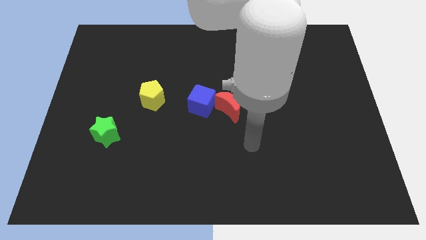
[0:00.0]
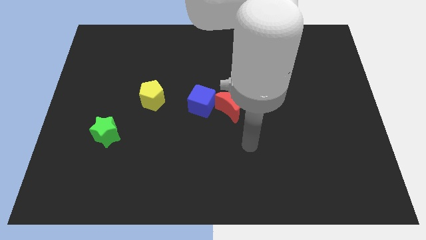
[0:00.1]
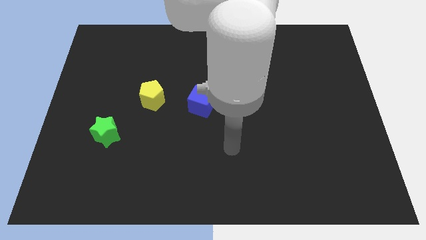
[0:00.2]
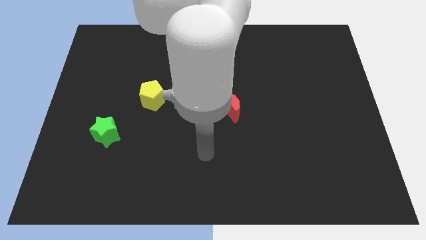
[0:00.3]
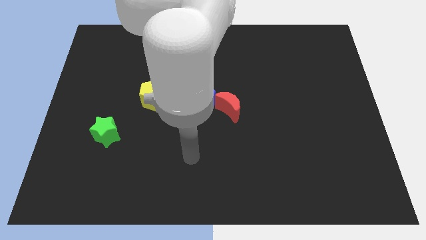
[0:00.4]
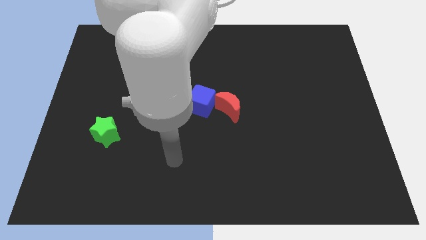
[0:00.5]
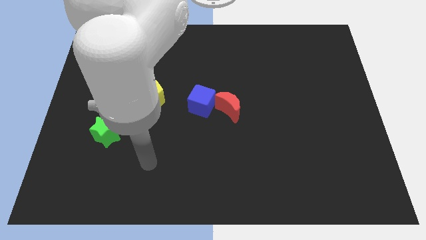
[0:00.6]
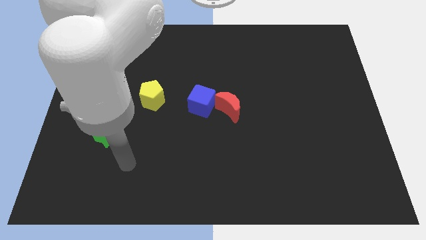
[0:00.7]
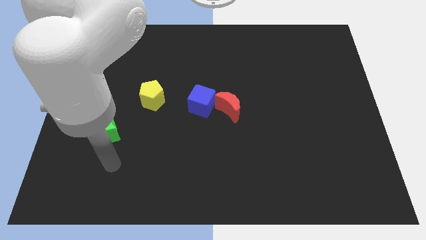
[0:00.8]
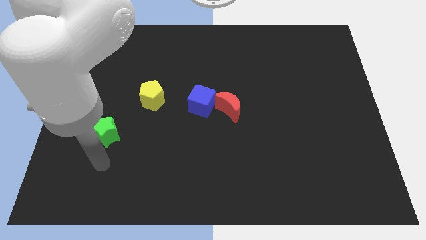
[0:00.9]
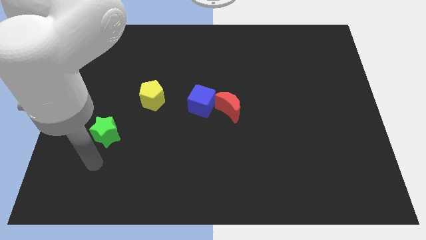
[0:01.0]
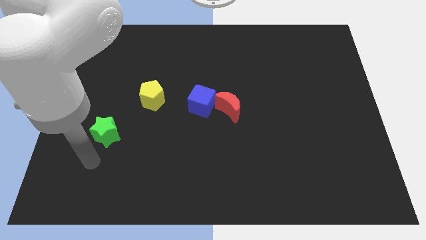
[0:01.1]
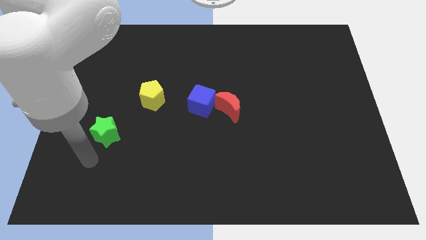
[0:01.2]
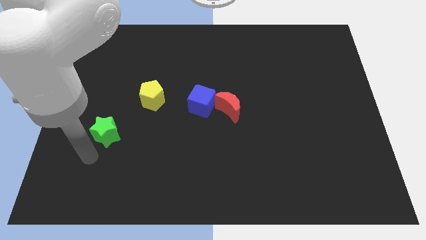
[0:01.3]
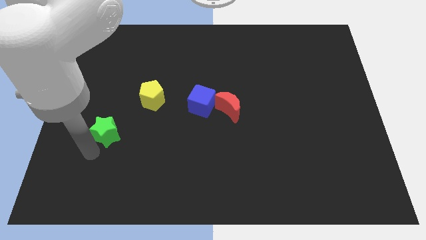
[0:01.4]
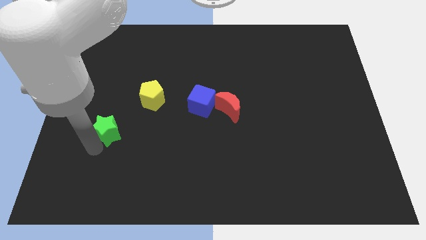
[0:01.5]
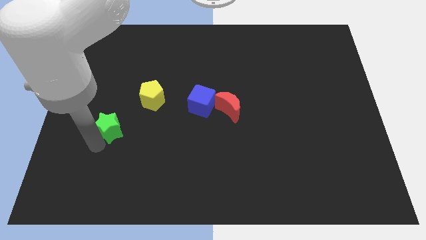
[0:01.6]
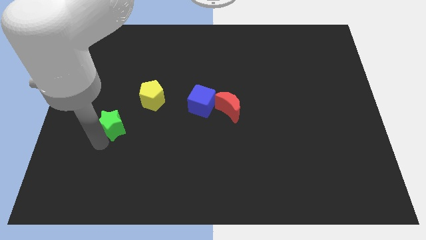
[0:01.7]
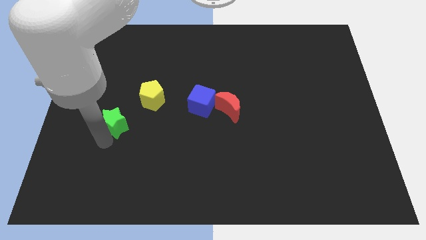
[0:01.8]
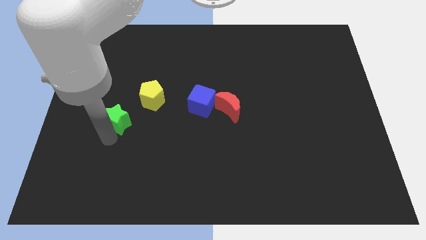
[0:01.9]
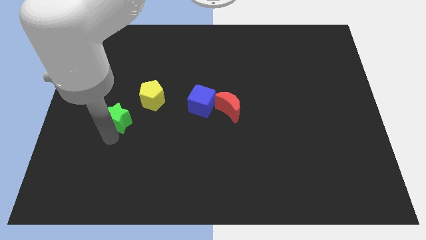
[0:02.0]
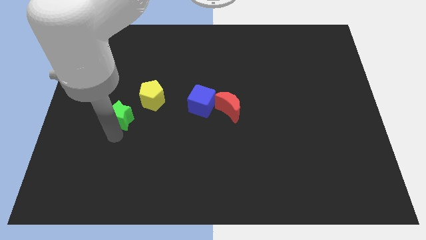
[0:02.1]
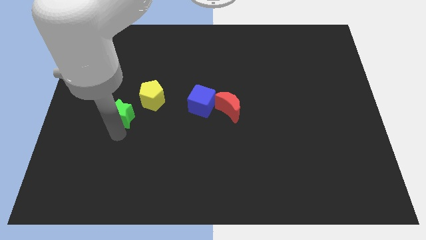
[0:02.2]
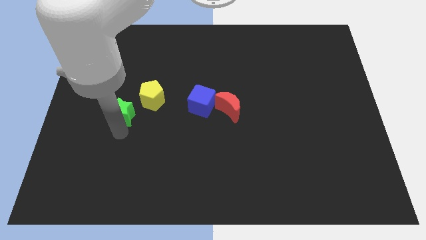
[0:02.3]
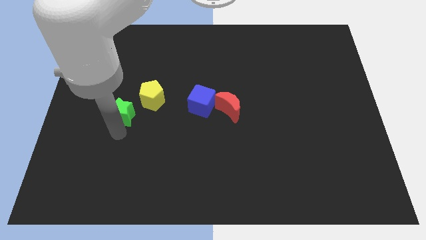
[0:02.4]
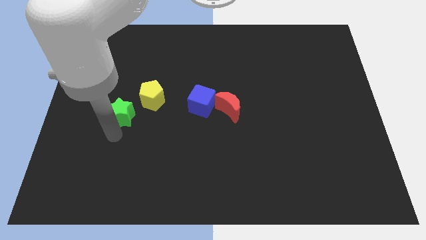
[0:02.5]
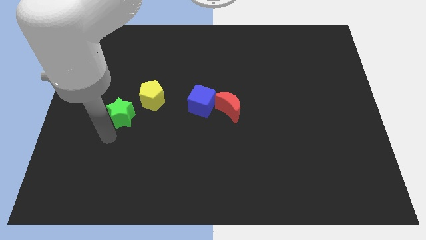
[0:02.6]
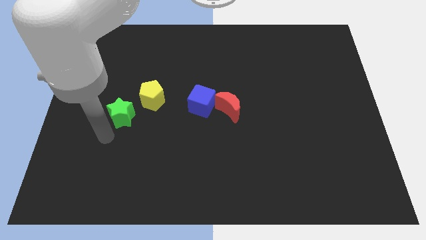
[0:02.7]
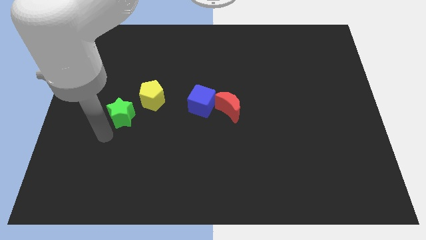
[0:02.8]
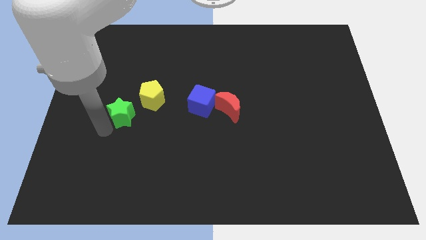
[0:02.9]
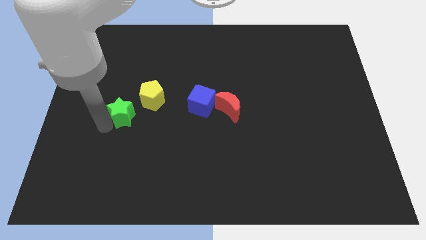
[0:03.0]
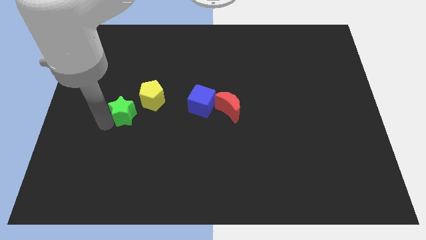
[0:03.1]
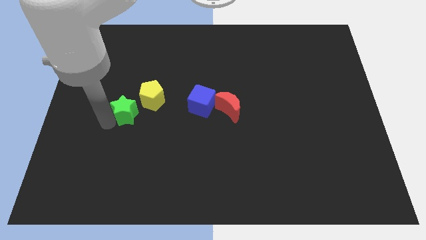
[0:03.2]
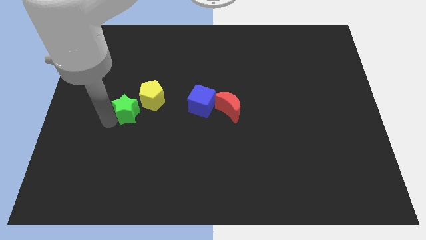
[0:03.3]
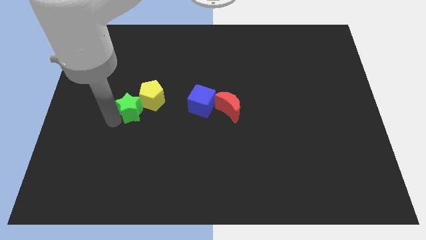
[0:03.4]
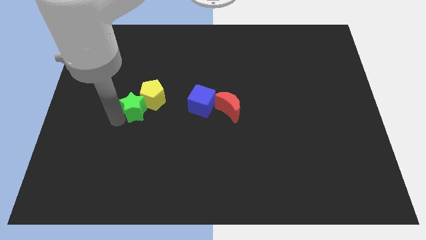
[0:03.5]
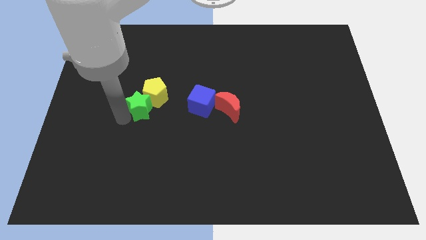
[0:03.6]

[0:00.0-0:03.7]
move the green block towards the yellow block

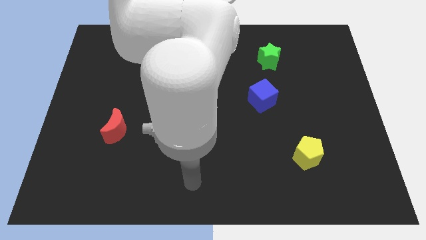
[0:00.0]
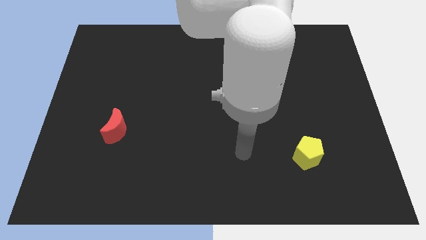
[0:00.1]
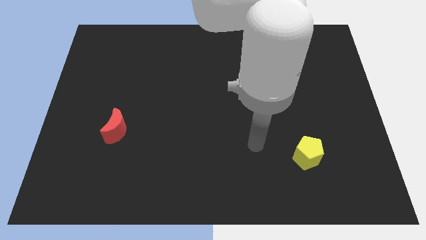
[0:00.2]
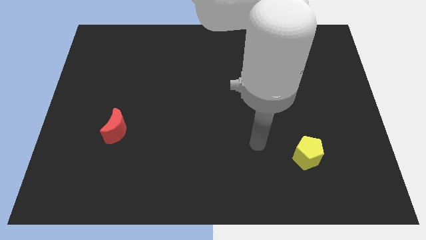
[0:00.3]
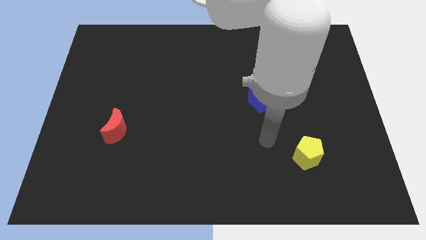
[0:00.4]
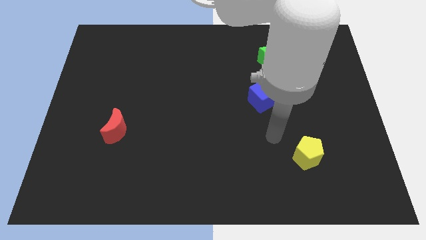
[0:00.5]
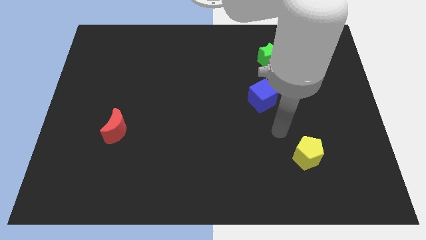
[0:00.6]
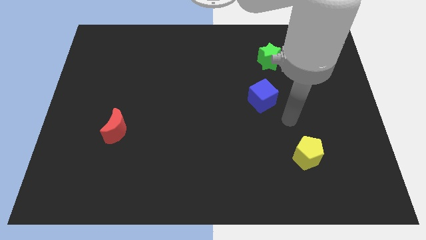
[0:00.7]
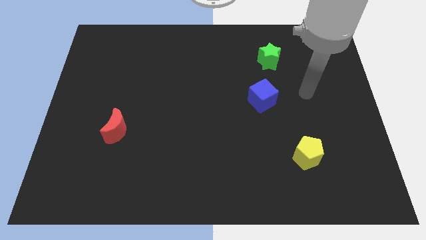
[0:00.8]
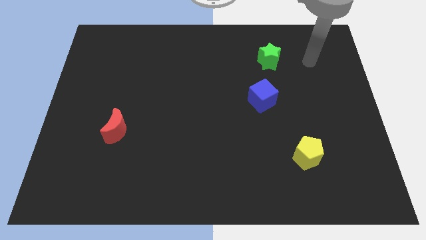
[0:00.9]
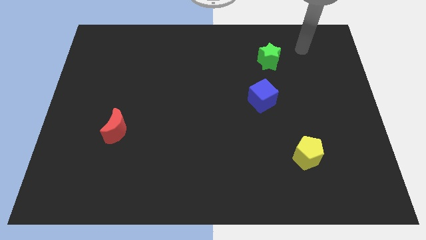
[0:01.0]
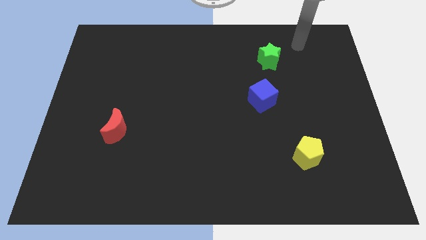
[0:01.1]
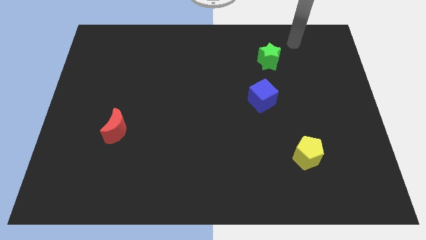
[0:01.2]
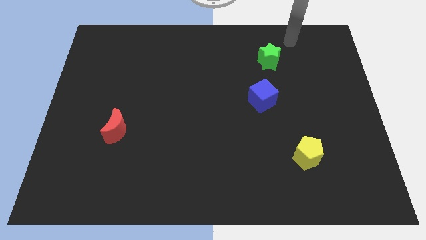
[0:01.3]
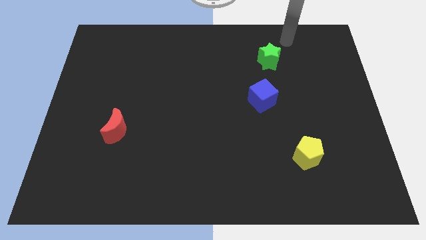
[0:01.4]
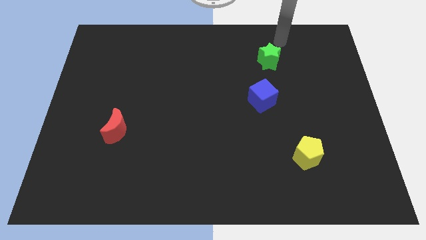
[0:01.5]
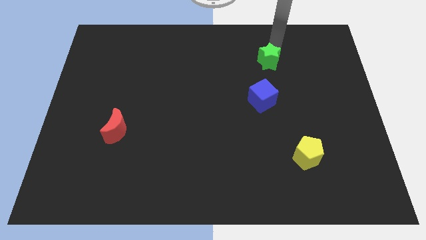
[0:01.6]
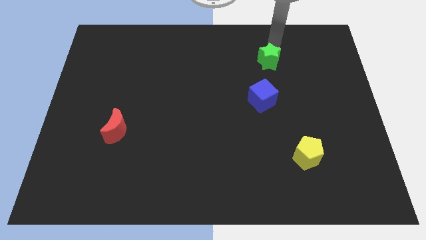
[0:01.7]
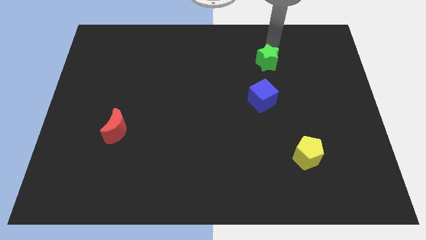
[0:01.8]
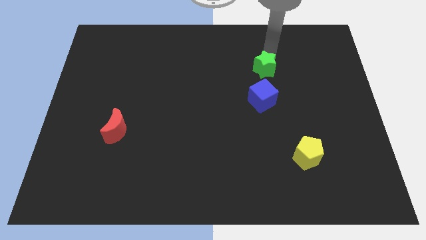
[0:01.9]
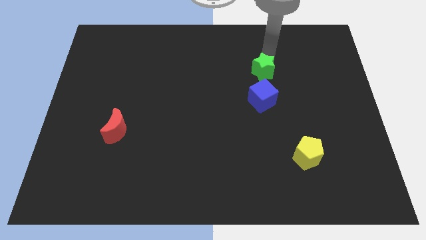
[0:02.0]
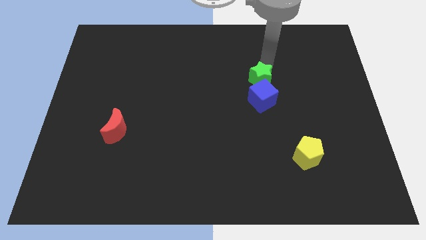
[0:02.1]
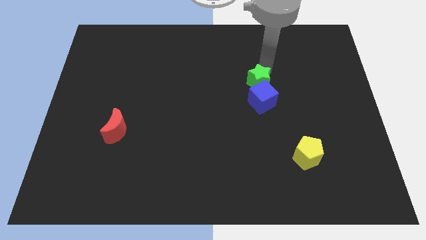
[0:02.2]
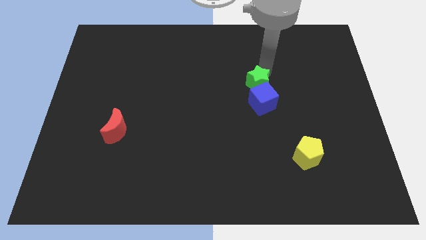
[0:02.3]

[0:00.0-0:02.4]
push the green block next to the blue cube

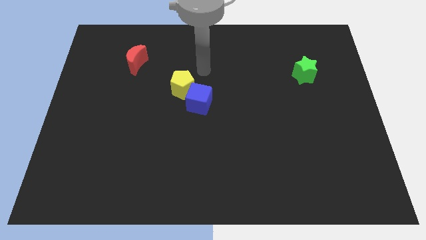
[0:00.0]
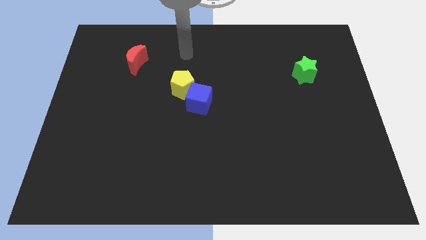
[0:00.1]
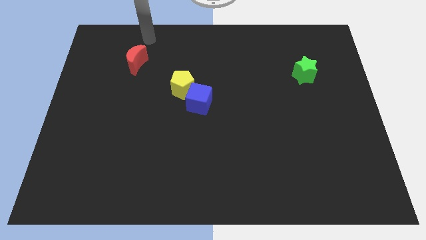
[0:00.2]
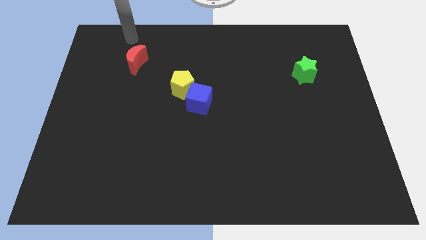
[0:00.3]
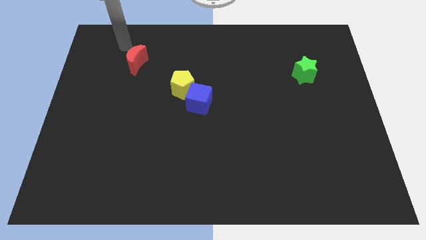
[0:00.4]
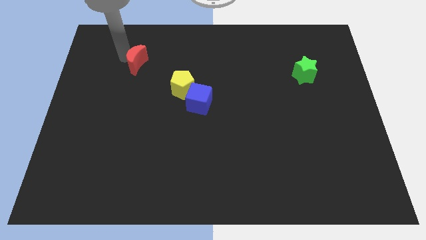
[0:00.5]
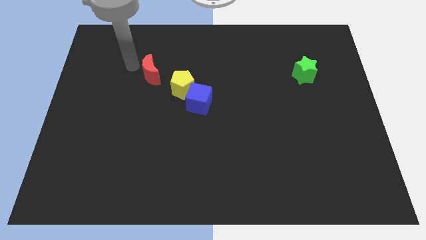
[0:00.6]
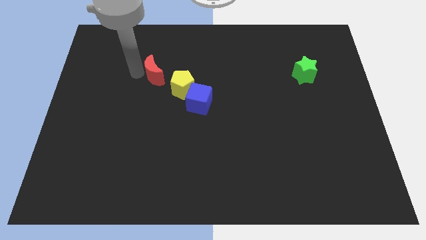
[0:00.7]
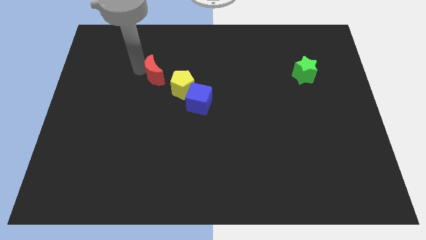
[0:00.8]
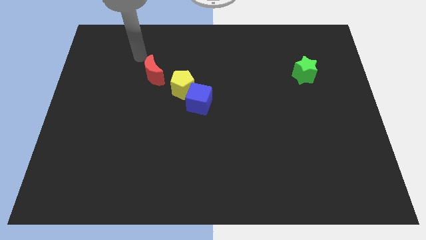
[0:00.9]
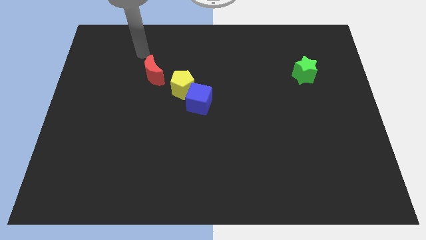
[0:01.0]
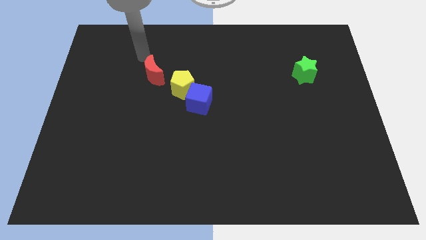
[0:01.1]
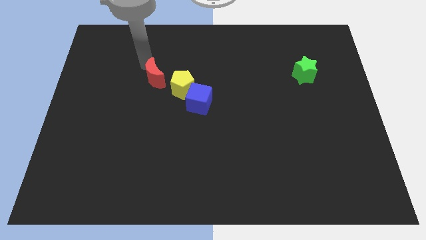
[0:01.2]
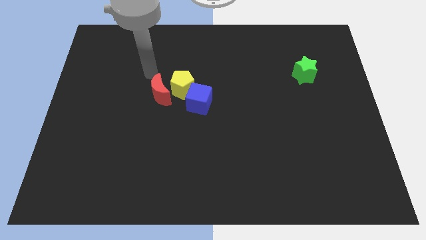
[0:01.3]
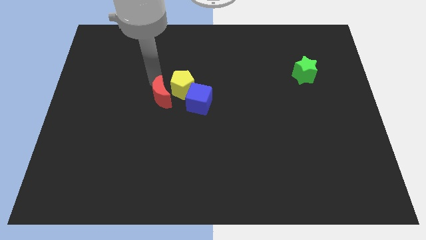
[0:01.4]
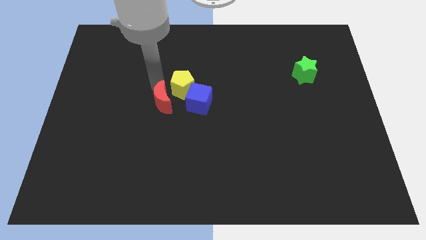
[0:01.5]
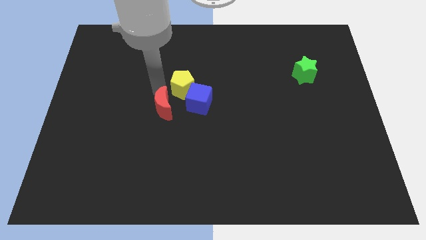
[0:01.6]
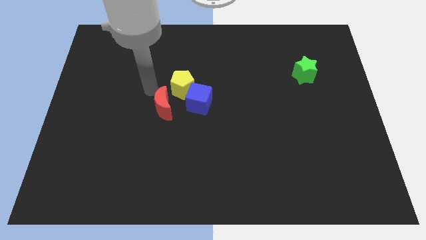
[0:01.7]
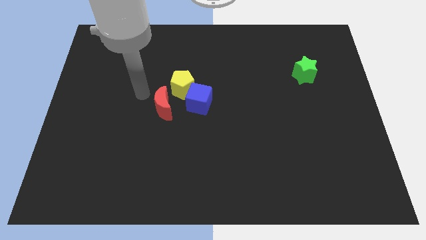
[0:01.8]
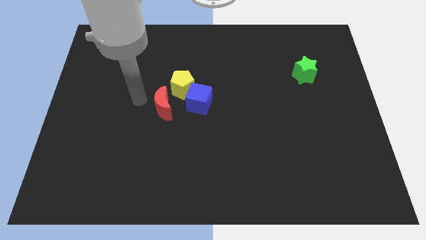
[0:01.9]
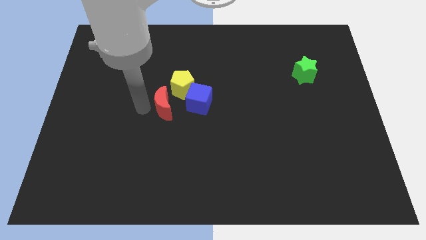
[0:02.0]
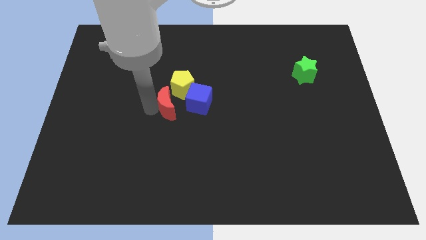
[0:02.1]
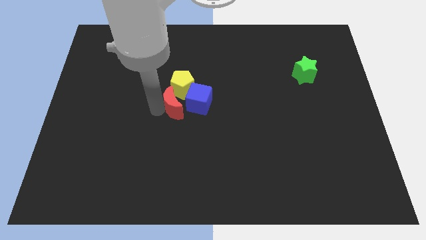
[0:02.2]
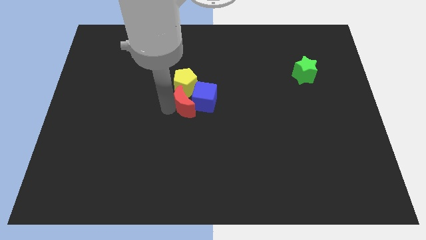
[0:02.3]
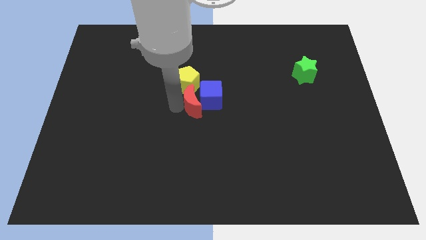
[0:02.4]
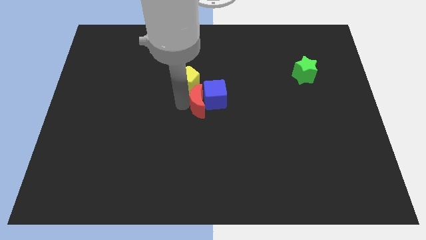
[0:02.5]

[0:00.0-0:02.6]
move the red block towards the cube
